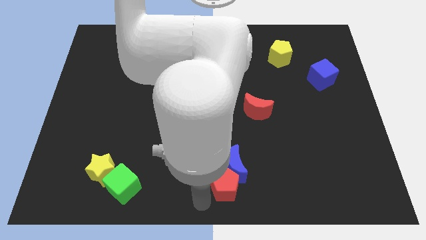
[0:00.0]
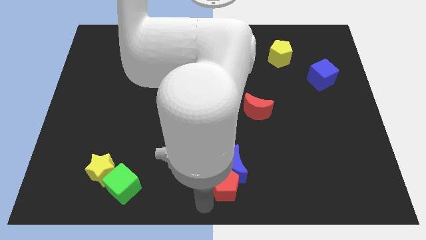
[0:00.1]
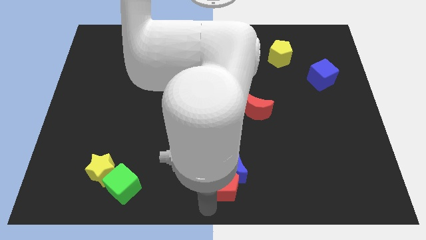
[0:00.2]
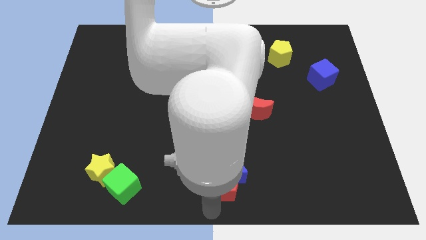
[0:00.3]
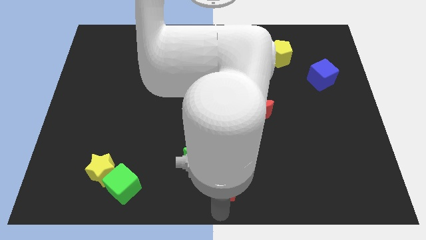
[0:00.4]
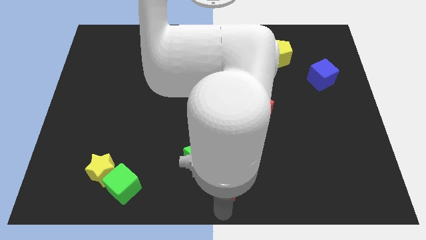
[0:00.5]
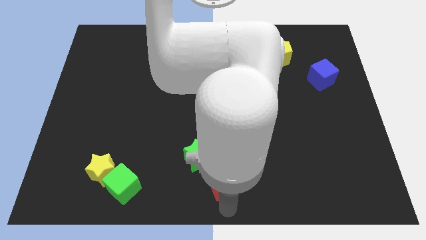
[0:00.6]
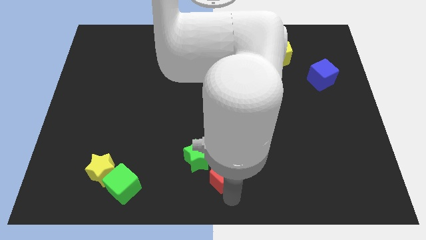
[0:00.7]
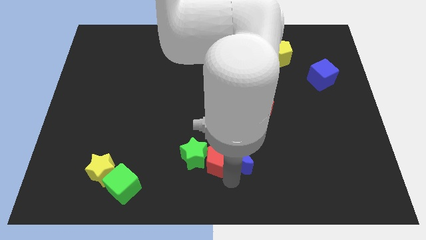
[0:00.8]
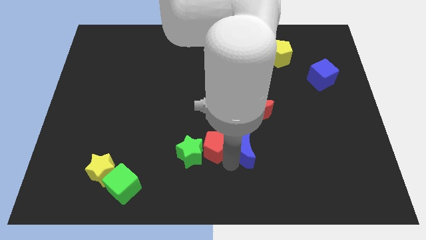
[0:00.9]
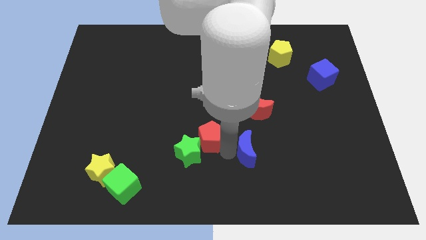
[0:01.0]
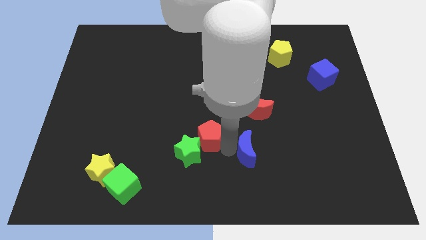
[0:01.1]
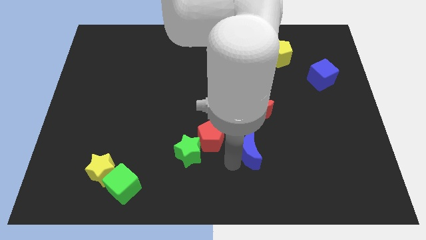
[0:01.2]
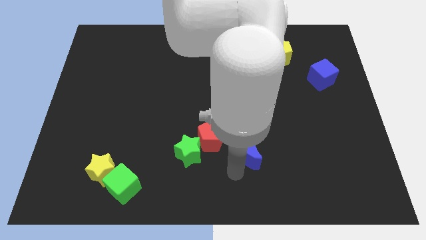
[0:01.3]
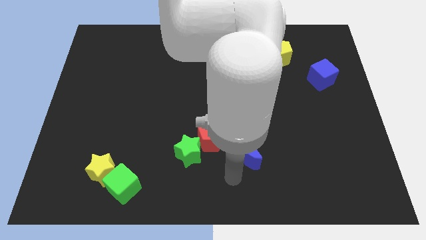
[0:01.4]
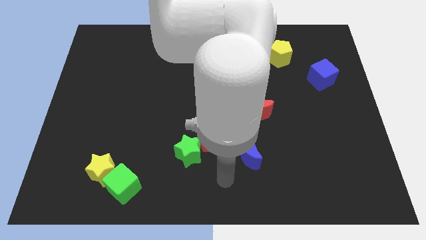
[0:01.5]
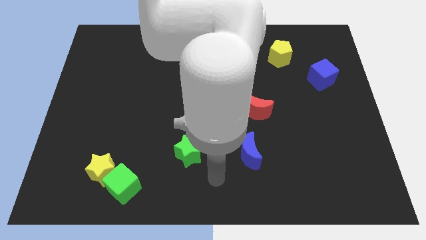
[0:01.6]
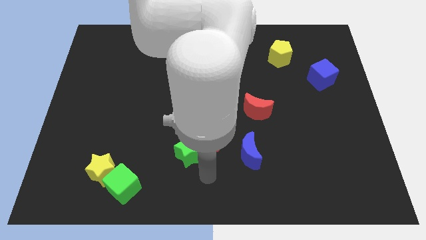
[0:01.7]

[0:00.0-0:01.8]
place the red pentagon in between green star and blue crescent

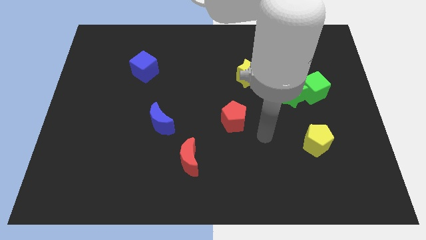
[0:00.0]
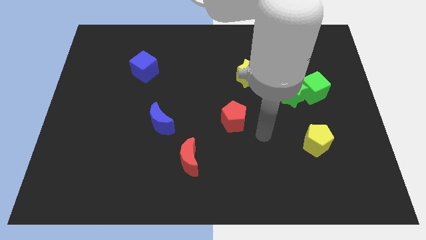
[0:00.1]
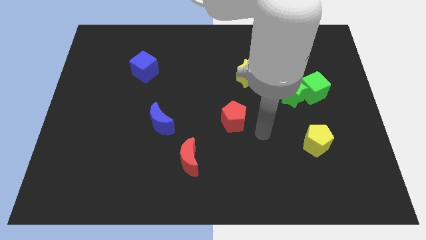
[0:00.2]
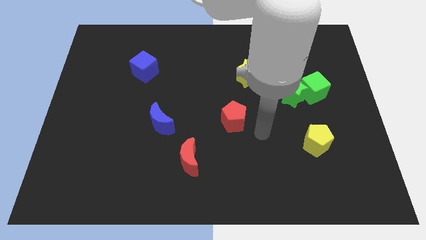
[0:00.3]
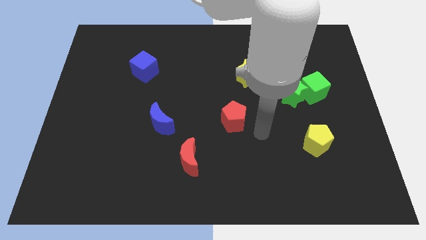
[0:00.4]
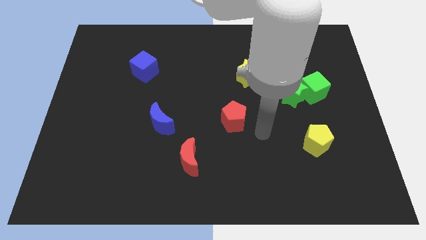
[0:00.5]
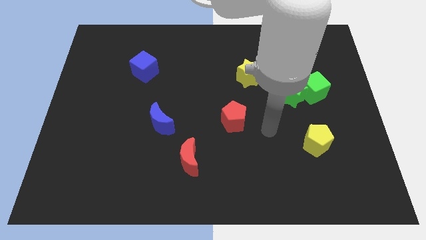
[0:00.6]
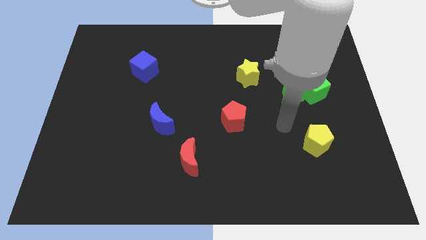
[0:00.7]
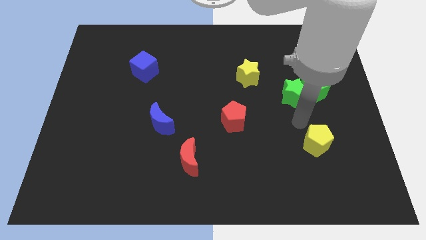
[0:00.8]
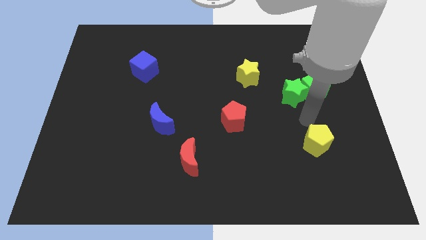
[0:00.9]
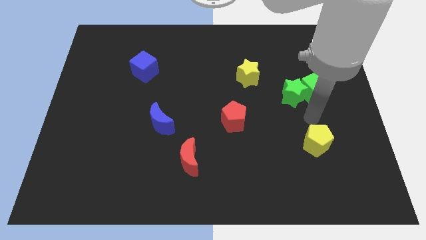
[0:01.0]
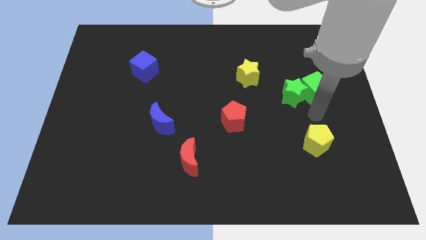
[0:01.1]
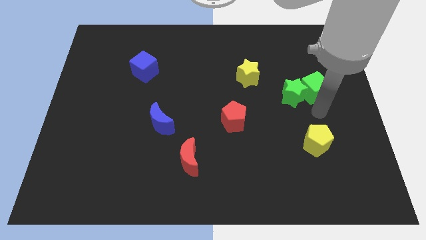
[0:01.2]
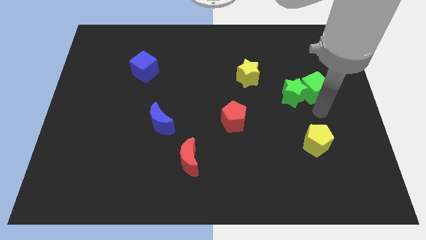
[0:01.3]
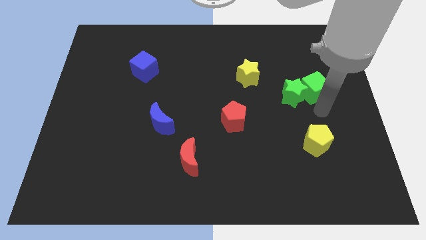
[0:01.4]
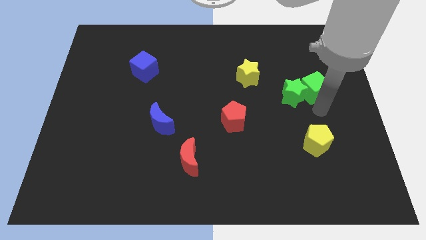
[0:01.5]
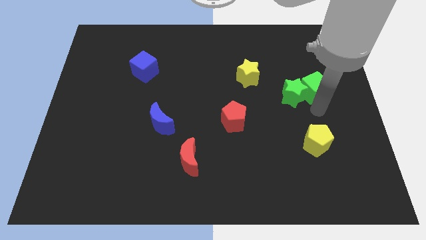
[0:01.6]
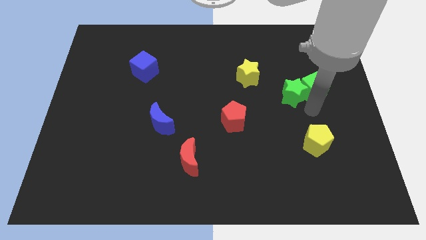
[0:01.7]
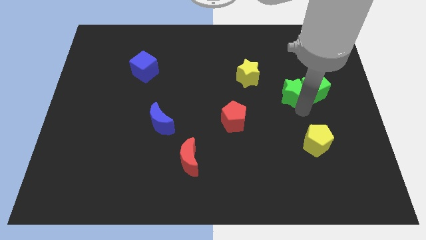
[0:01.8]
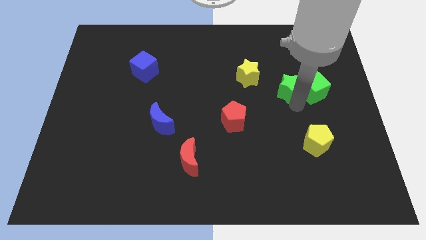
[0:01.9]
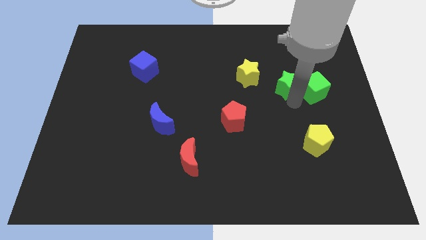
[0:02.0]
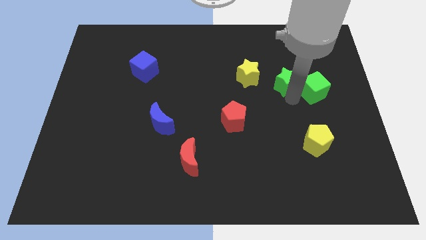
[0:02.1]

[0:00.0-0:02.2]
move arm near green star

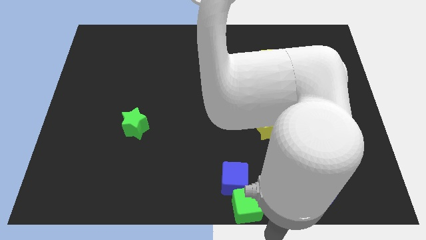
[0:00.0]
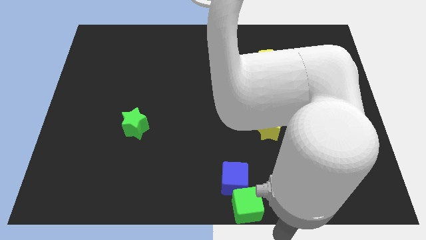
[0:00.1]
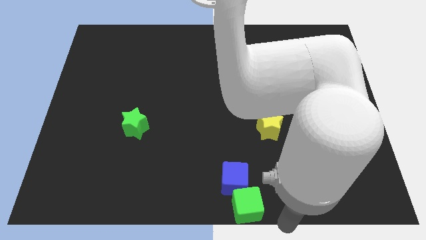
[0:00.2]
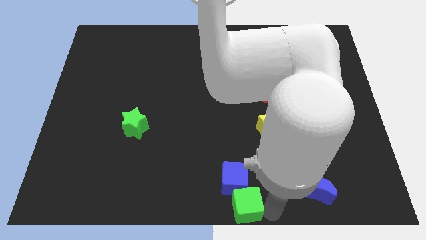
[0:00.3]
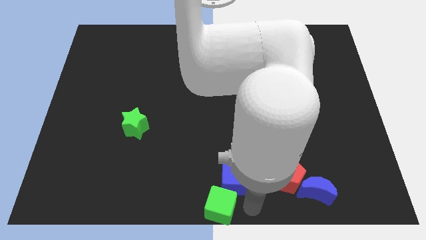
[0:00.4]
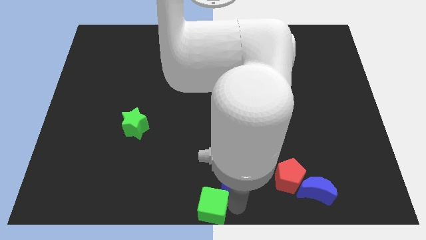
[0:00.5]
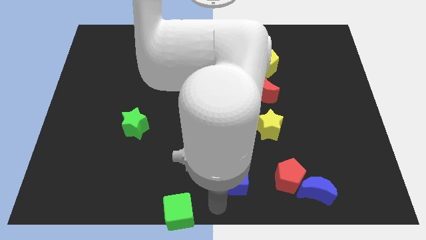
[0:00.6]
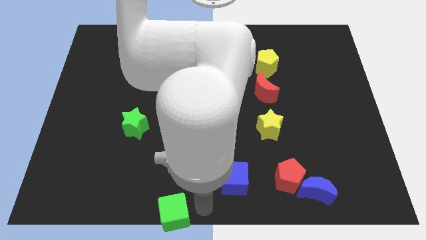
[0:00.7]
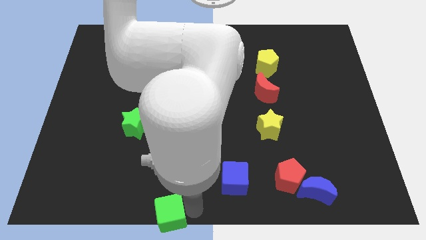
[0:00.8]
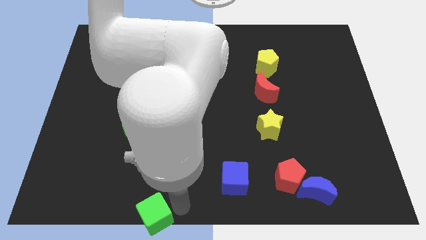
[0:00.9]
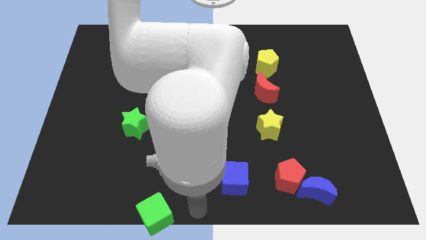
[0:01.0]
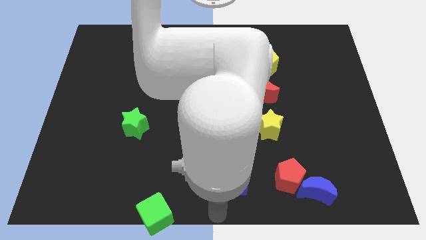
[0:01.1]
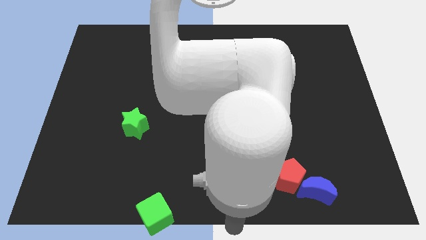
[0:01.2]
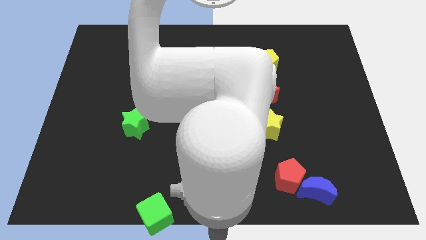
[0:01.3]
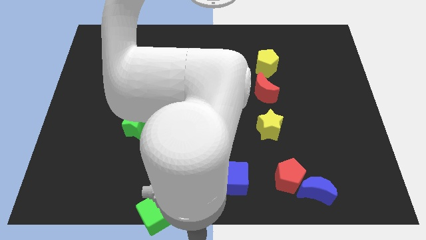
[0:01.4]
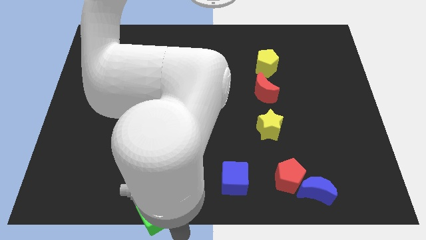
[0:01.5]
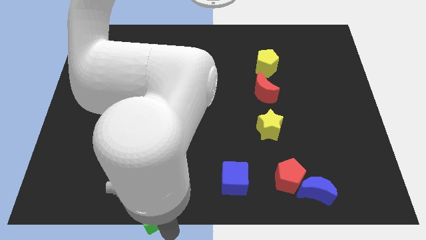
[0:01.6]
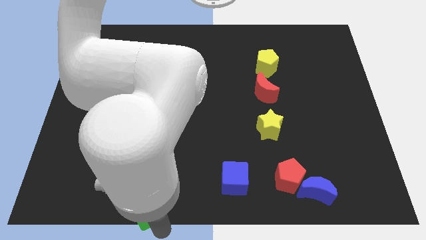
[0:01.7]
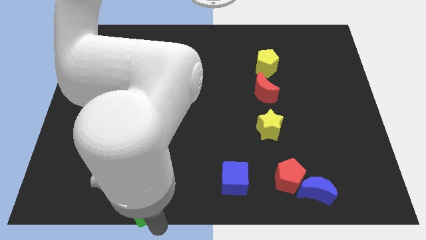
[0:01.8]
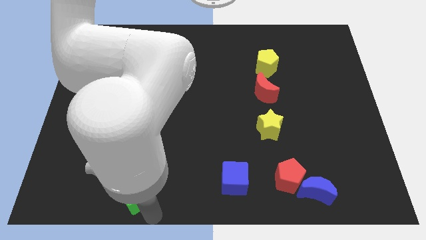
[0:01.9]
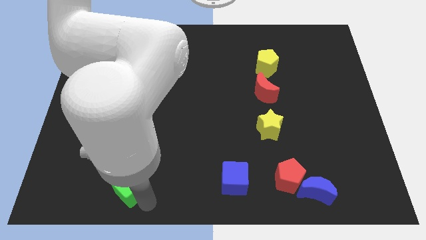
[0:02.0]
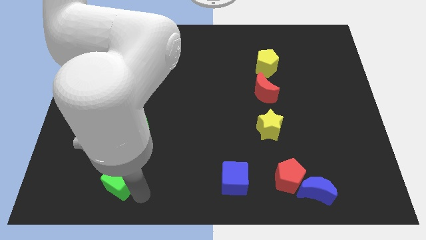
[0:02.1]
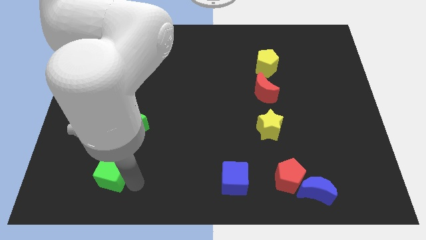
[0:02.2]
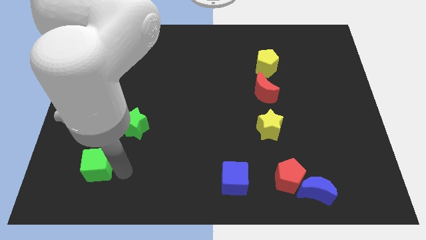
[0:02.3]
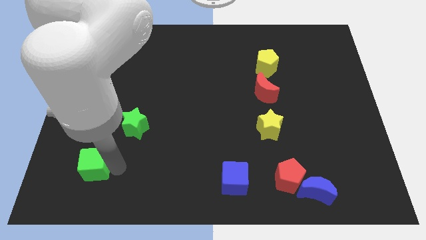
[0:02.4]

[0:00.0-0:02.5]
place the green cube below the green star

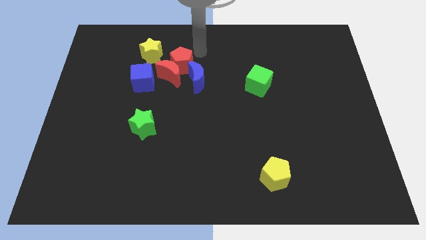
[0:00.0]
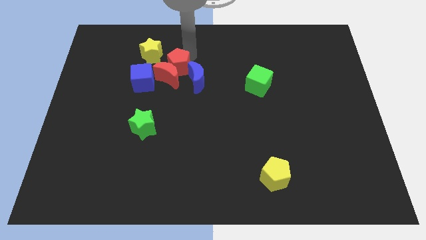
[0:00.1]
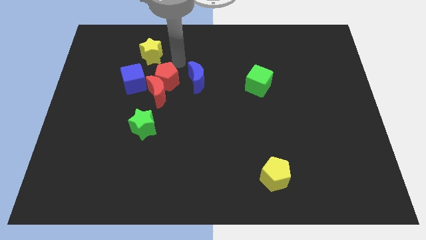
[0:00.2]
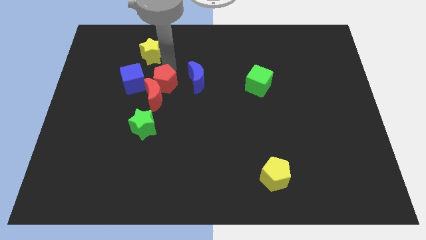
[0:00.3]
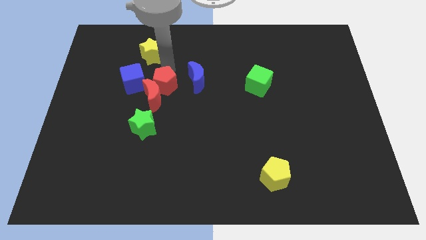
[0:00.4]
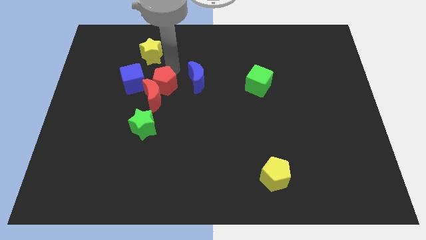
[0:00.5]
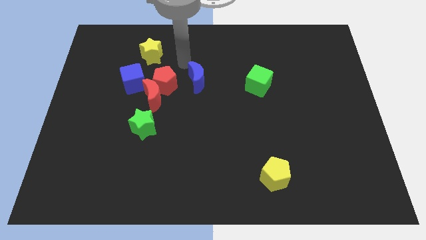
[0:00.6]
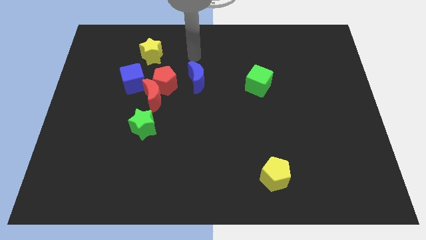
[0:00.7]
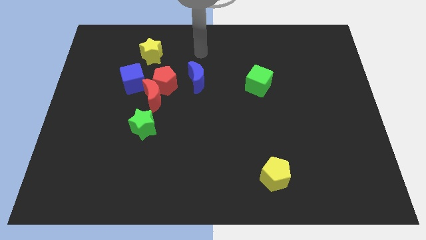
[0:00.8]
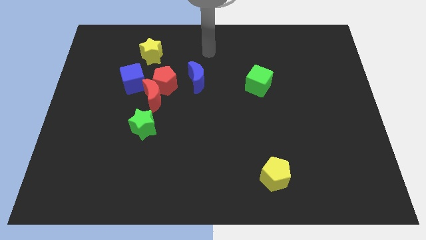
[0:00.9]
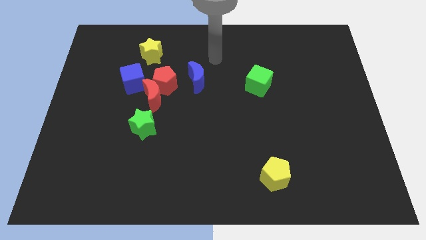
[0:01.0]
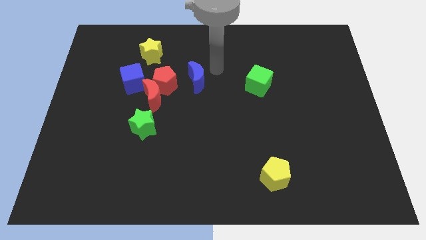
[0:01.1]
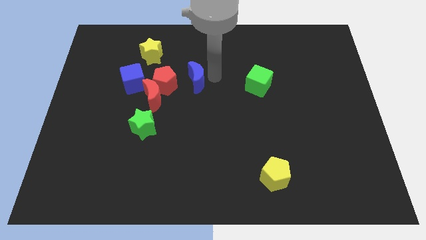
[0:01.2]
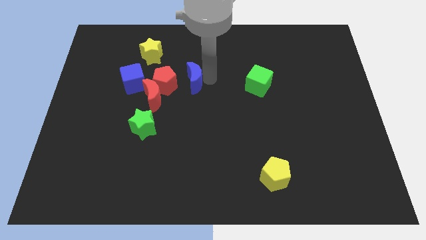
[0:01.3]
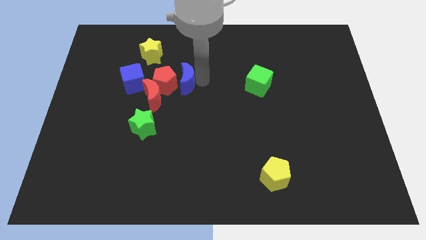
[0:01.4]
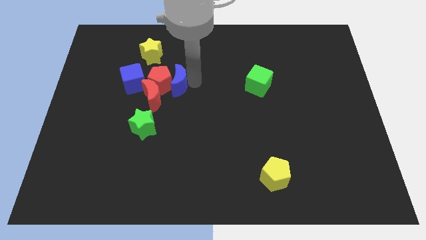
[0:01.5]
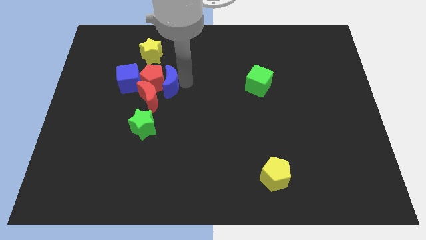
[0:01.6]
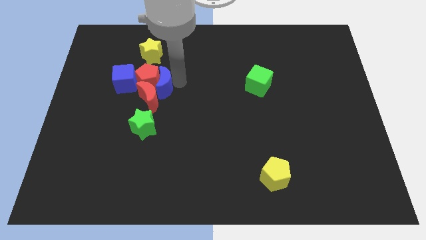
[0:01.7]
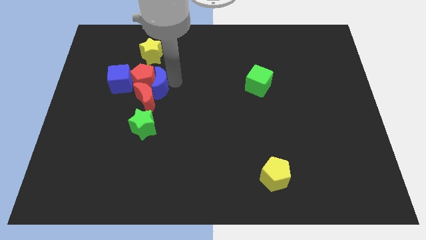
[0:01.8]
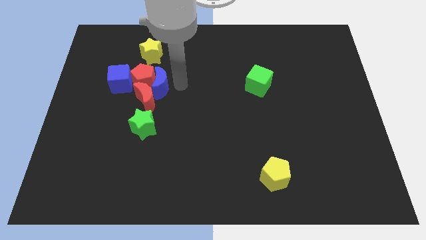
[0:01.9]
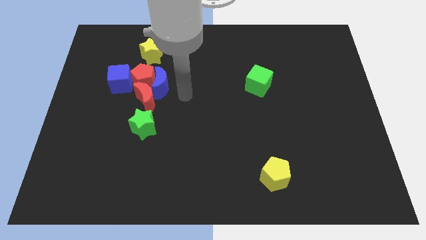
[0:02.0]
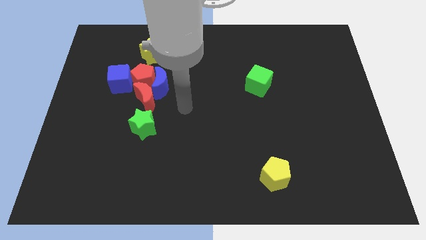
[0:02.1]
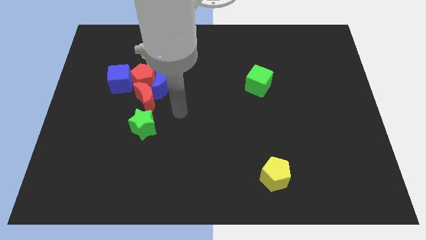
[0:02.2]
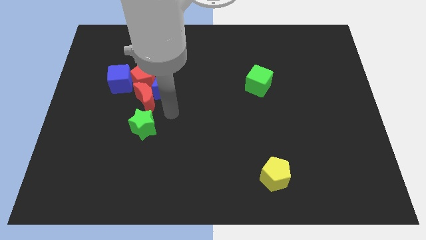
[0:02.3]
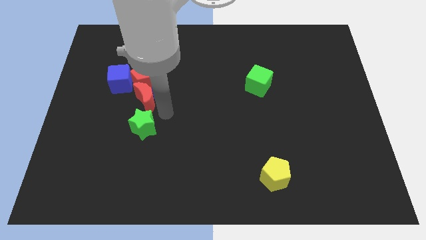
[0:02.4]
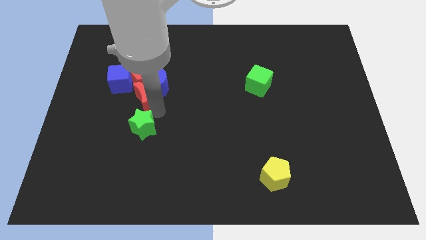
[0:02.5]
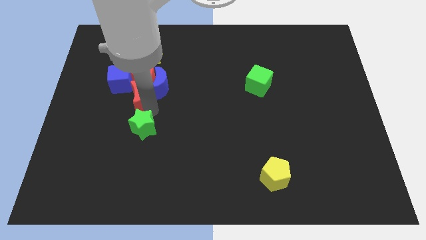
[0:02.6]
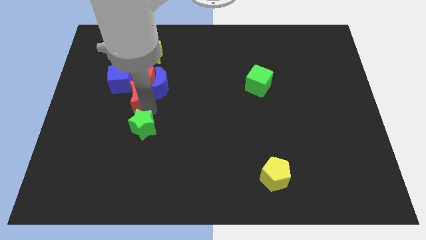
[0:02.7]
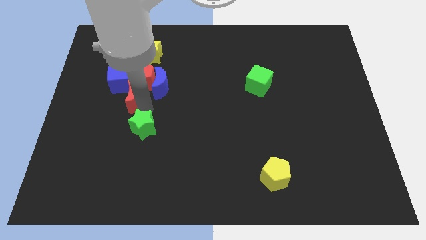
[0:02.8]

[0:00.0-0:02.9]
place the blue moon diagonally top right to the green star
